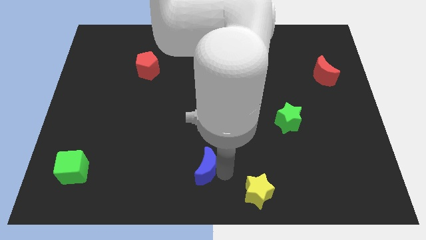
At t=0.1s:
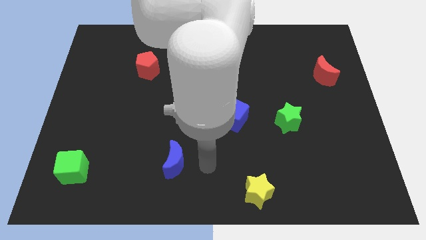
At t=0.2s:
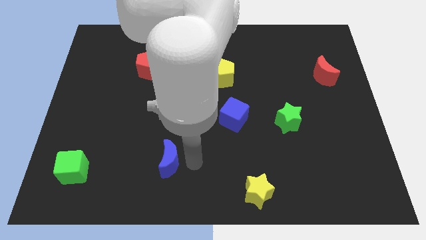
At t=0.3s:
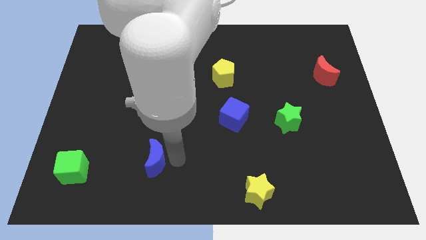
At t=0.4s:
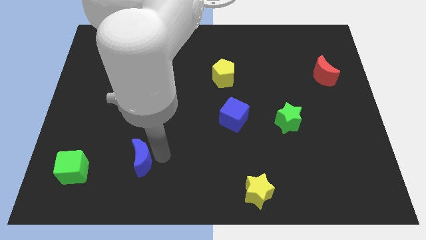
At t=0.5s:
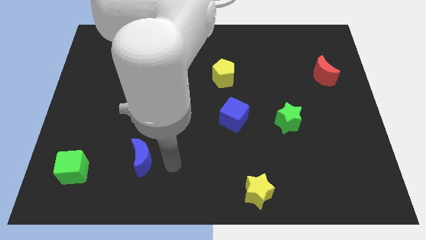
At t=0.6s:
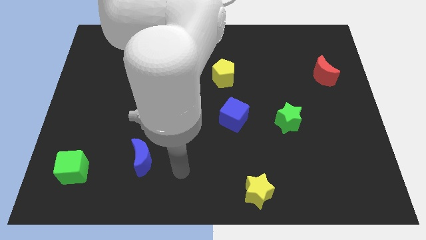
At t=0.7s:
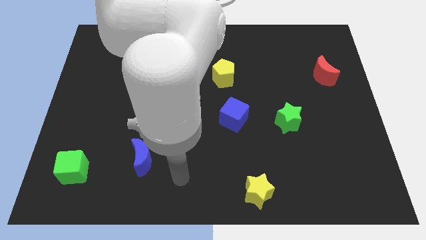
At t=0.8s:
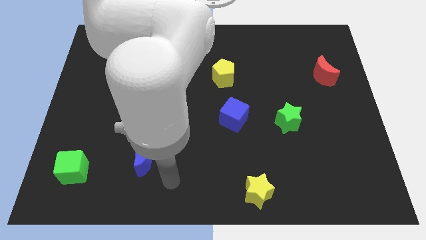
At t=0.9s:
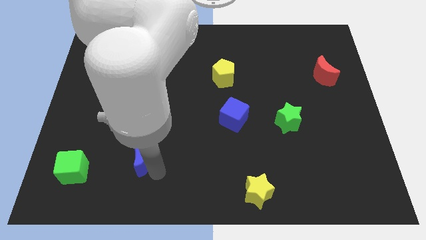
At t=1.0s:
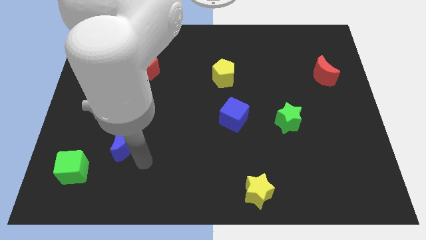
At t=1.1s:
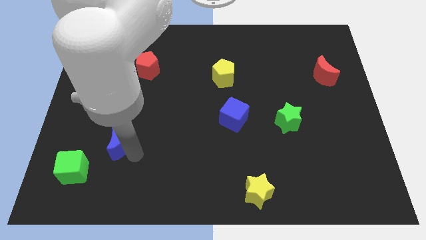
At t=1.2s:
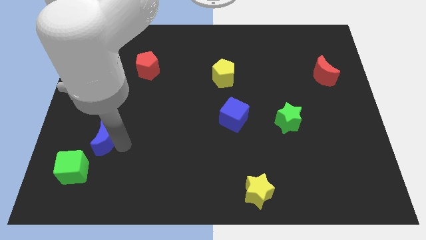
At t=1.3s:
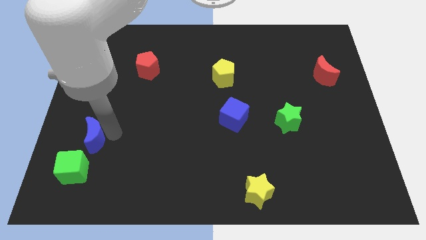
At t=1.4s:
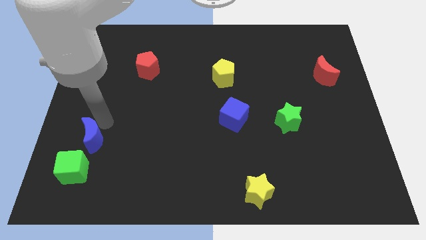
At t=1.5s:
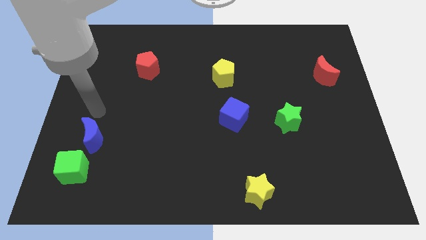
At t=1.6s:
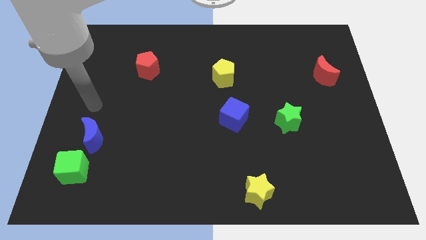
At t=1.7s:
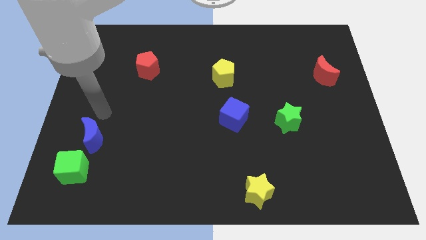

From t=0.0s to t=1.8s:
move the blue crescent to the top of the green cube

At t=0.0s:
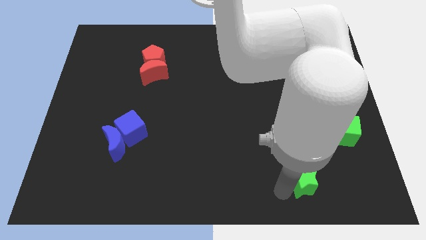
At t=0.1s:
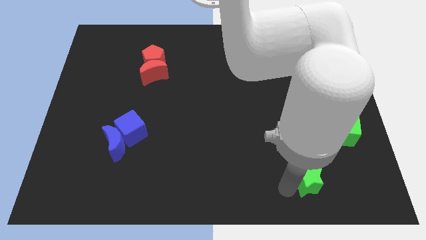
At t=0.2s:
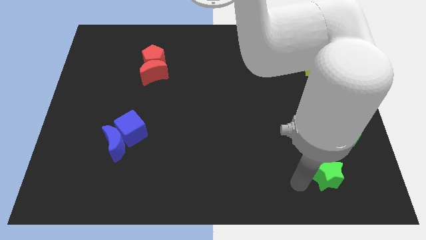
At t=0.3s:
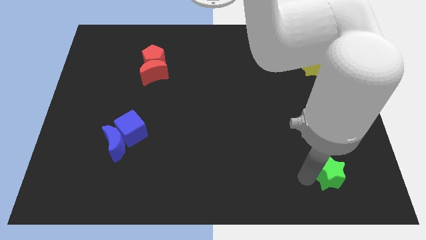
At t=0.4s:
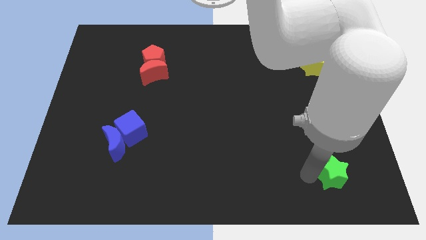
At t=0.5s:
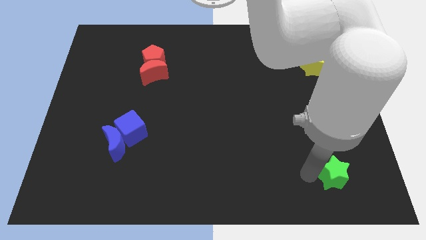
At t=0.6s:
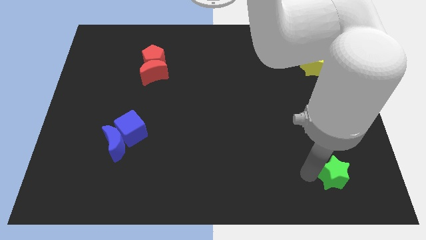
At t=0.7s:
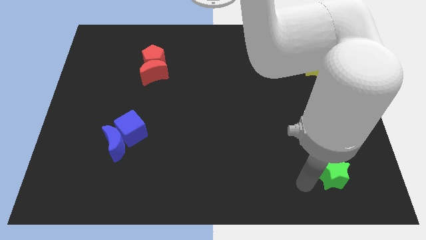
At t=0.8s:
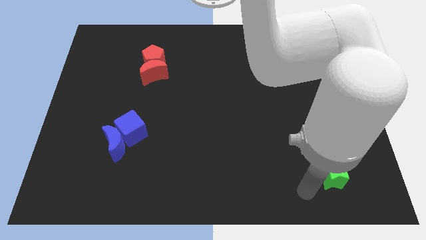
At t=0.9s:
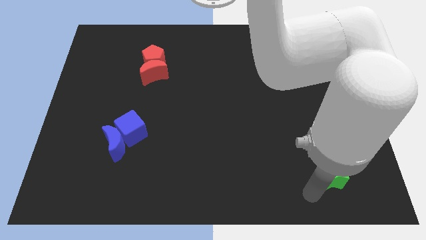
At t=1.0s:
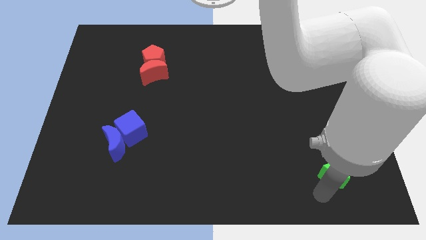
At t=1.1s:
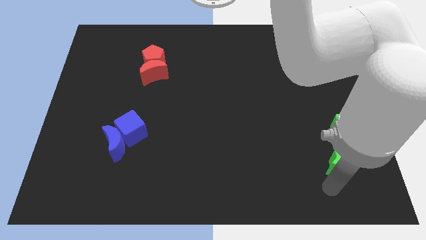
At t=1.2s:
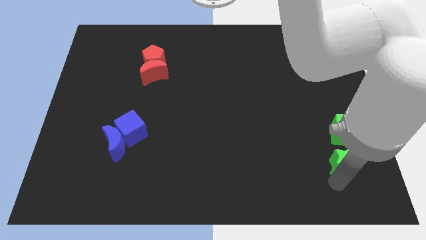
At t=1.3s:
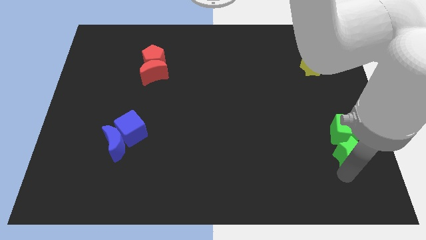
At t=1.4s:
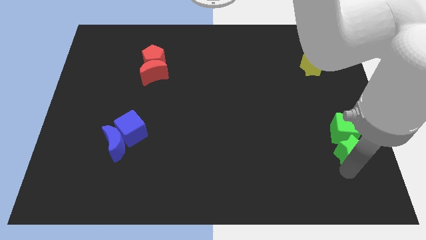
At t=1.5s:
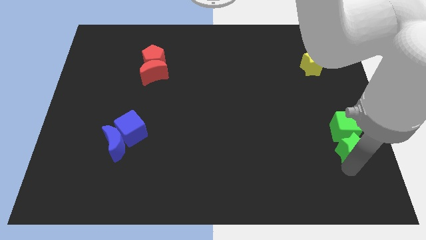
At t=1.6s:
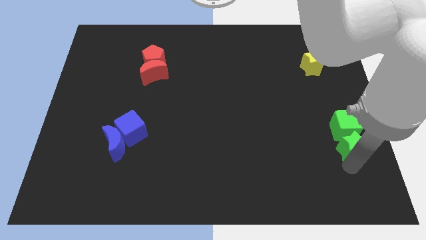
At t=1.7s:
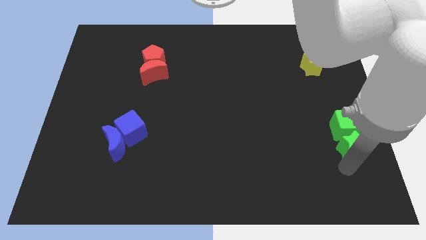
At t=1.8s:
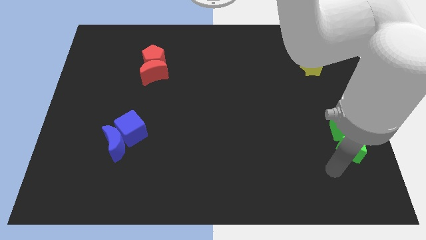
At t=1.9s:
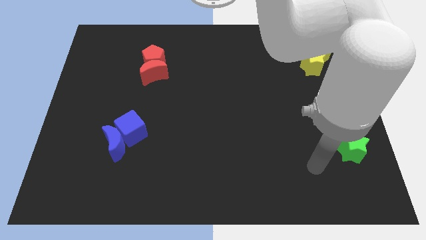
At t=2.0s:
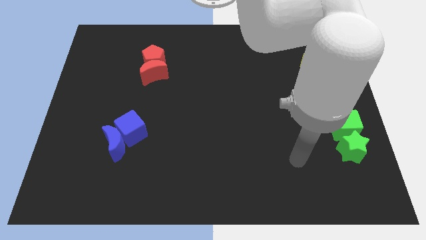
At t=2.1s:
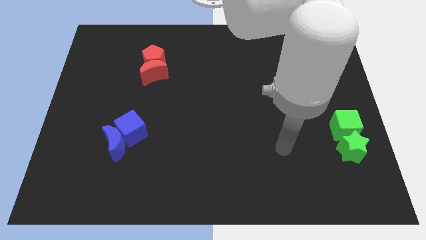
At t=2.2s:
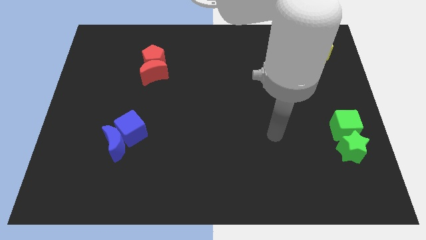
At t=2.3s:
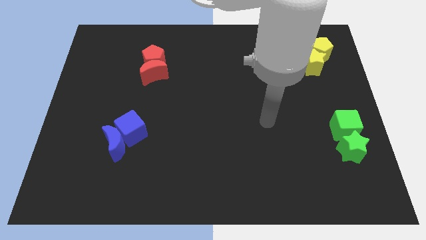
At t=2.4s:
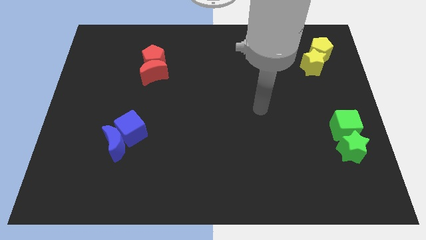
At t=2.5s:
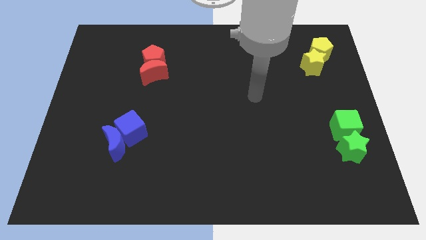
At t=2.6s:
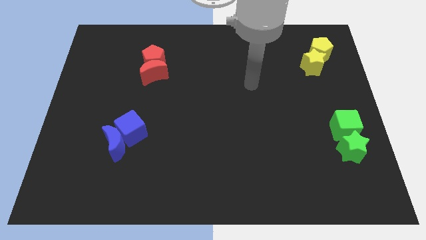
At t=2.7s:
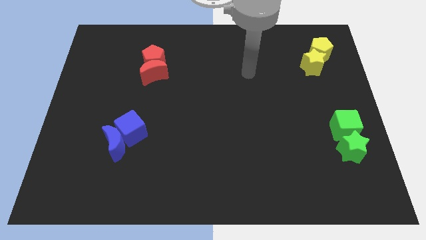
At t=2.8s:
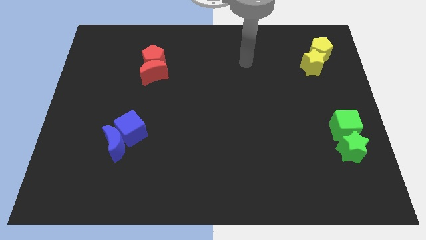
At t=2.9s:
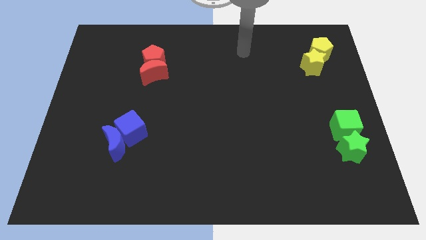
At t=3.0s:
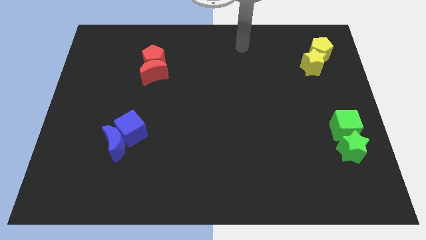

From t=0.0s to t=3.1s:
move green star into the green cube

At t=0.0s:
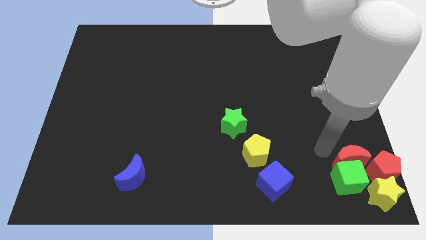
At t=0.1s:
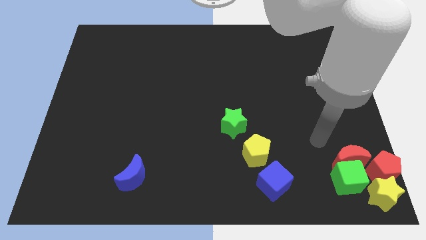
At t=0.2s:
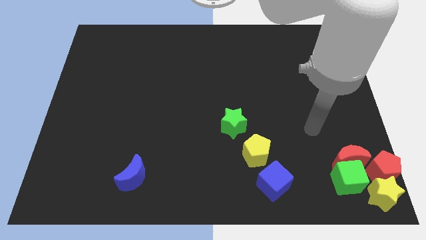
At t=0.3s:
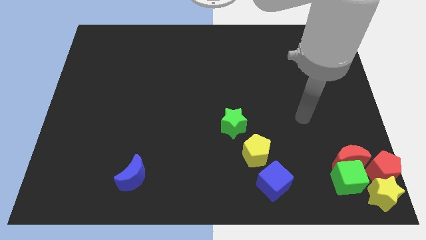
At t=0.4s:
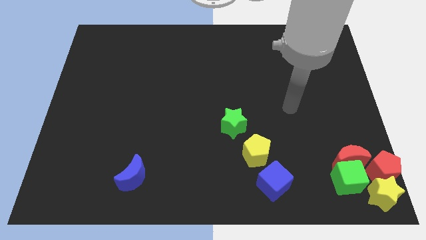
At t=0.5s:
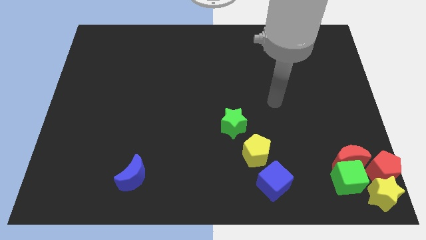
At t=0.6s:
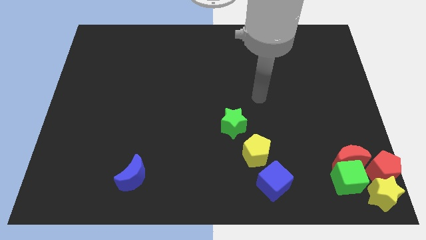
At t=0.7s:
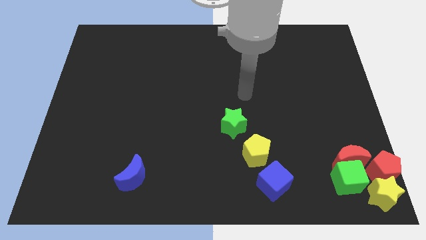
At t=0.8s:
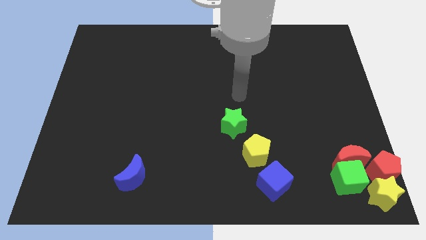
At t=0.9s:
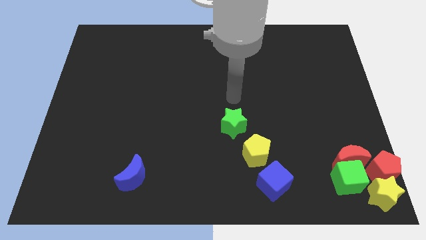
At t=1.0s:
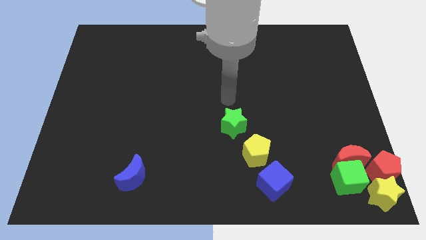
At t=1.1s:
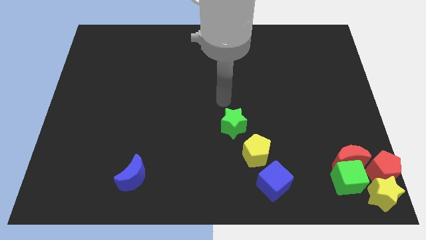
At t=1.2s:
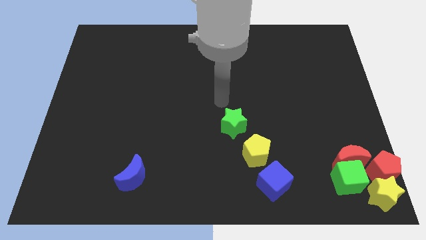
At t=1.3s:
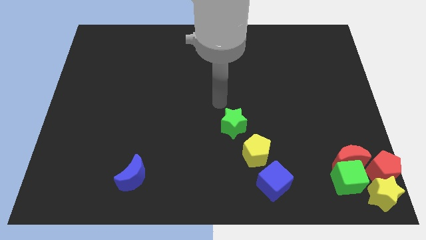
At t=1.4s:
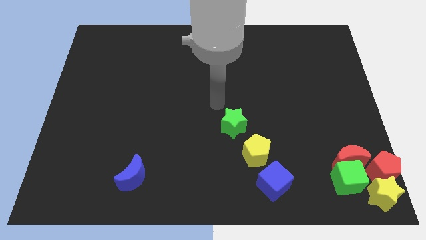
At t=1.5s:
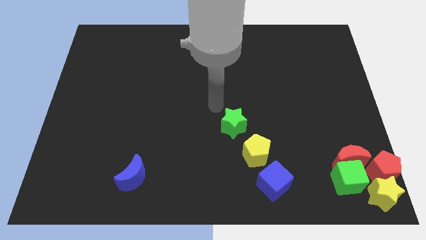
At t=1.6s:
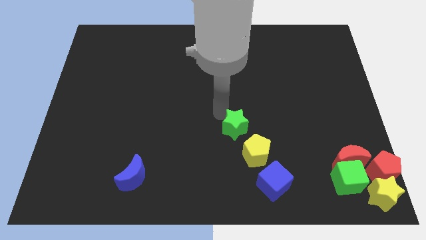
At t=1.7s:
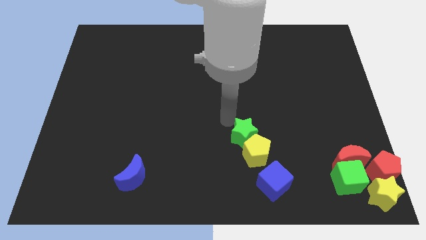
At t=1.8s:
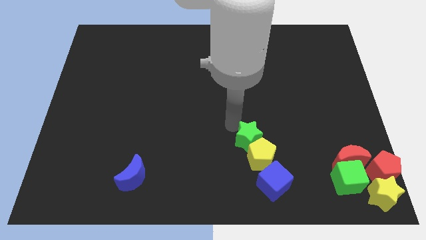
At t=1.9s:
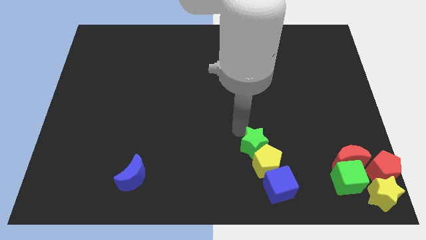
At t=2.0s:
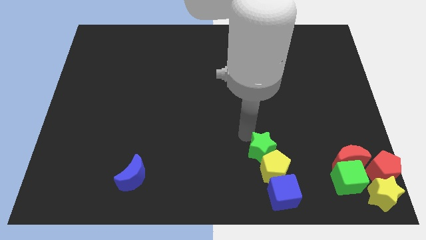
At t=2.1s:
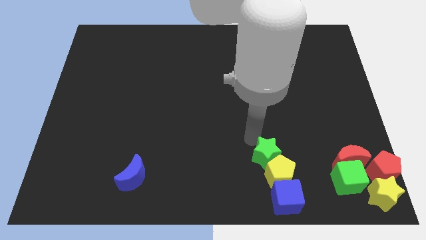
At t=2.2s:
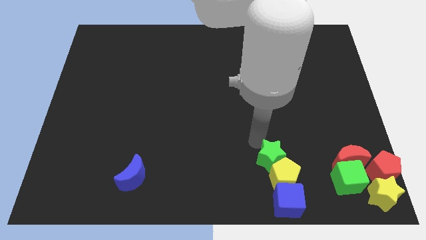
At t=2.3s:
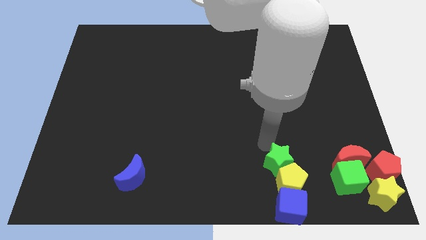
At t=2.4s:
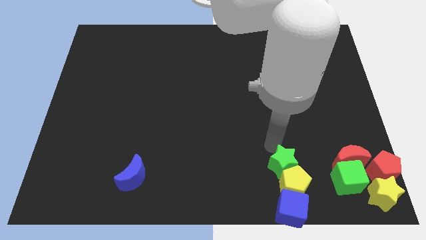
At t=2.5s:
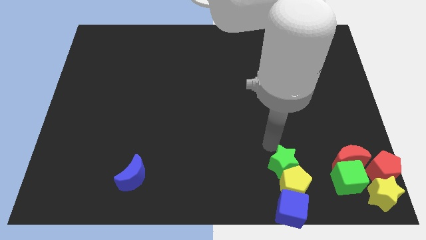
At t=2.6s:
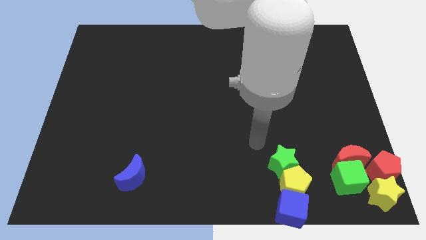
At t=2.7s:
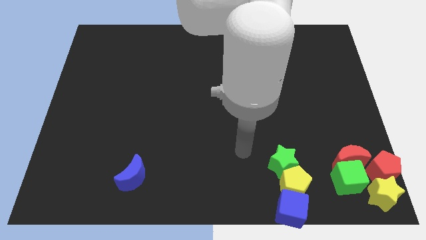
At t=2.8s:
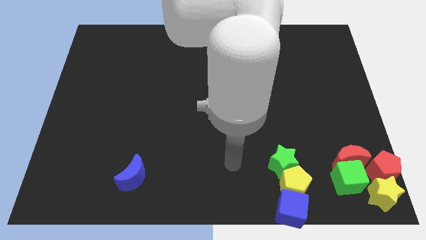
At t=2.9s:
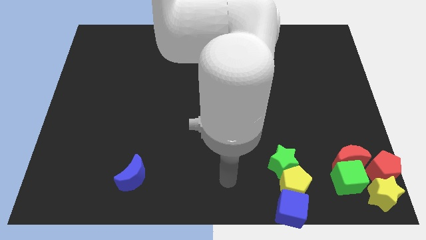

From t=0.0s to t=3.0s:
move the group of blocks to the left of another blocks

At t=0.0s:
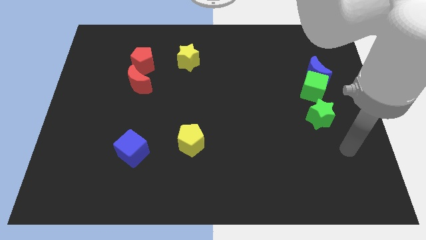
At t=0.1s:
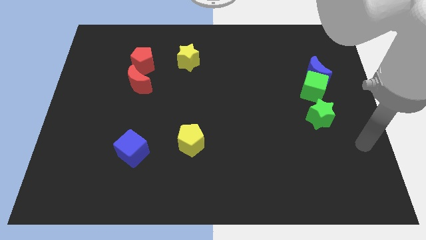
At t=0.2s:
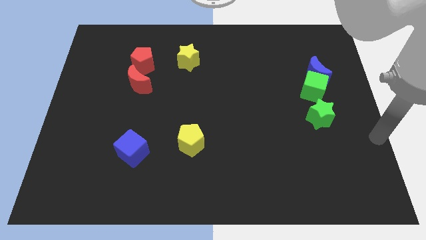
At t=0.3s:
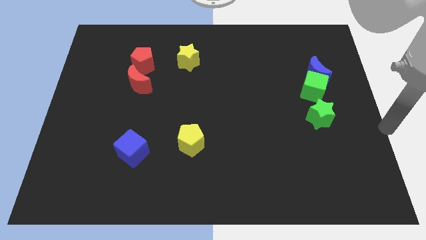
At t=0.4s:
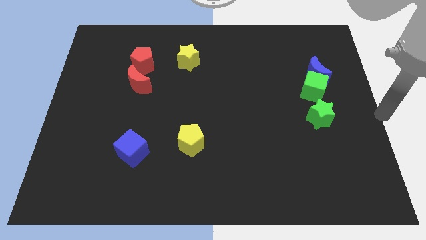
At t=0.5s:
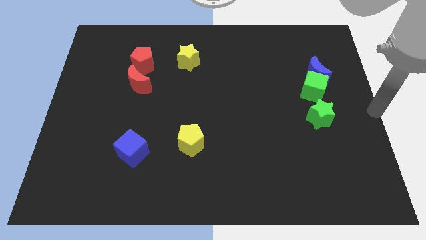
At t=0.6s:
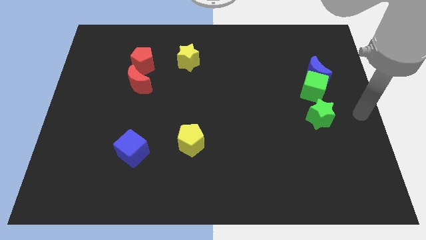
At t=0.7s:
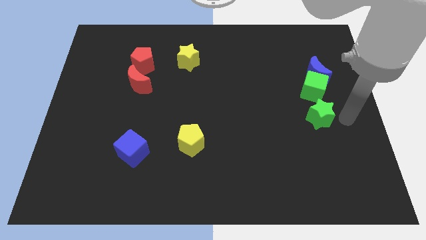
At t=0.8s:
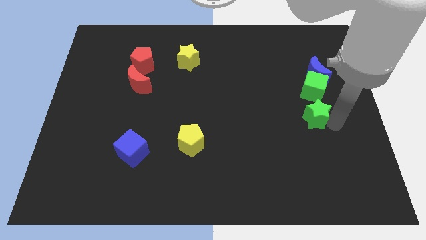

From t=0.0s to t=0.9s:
point your arm right to green star
